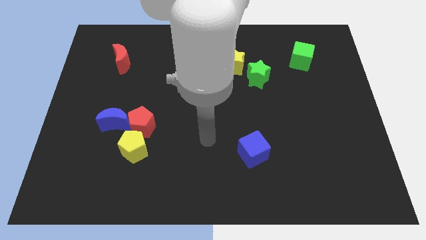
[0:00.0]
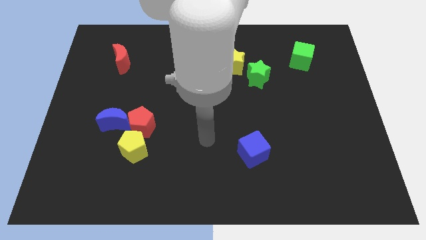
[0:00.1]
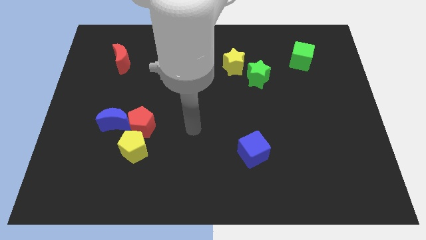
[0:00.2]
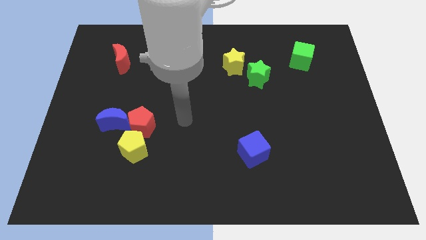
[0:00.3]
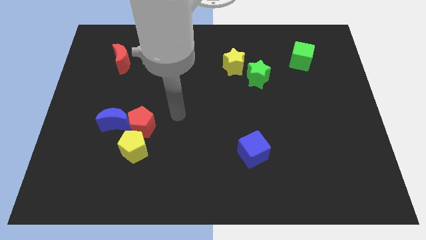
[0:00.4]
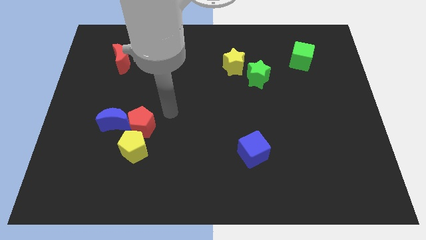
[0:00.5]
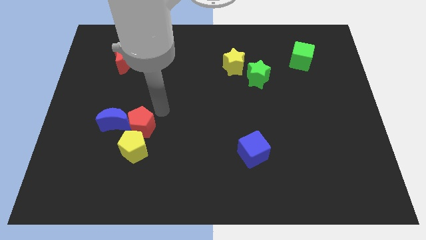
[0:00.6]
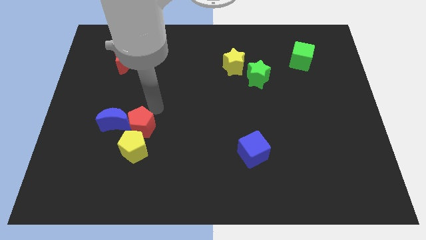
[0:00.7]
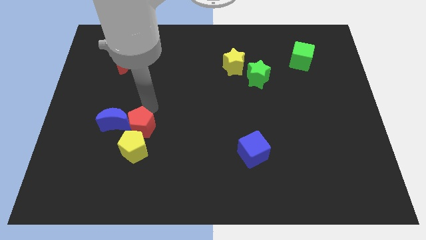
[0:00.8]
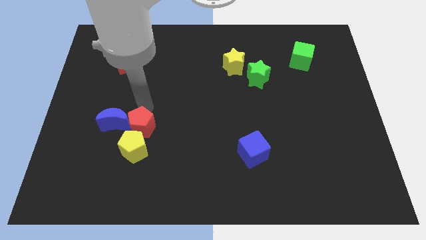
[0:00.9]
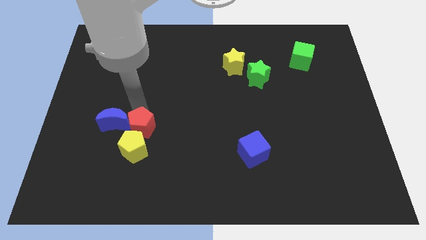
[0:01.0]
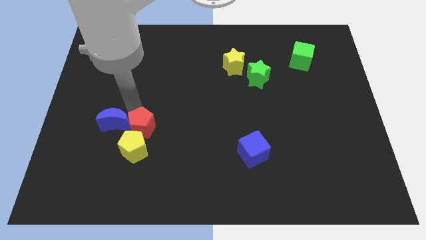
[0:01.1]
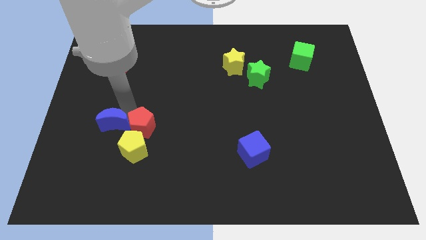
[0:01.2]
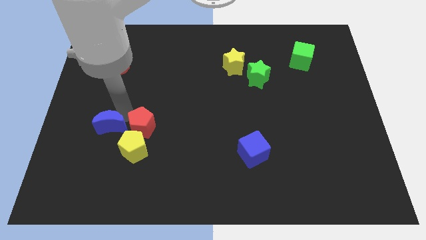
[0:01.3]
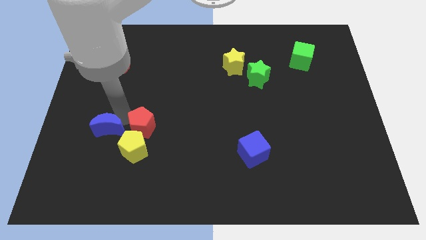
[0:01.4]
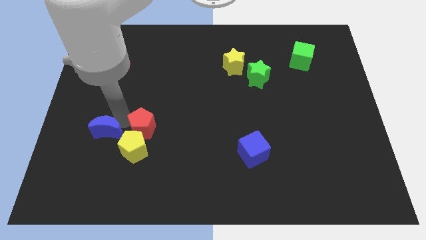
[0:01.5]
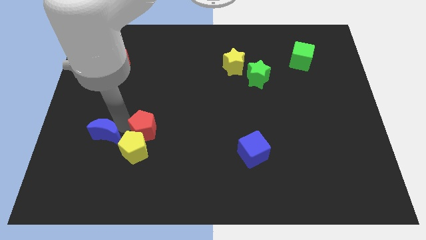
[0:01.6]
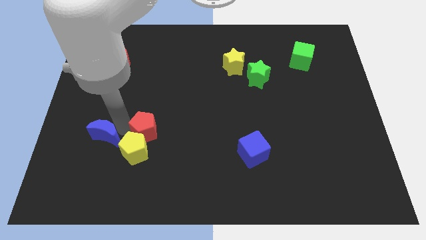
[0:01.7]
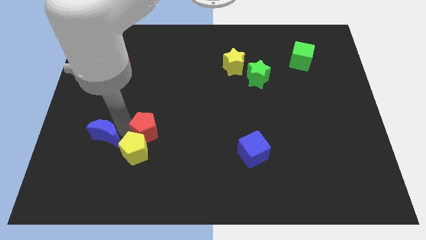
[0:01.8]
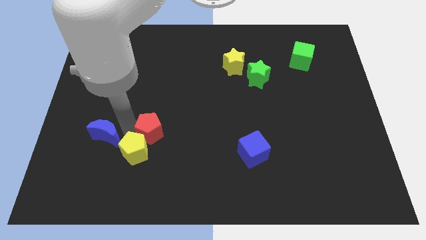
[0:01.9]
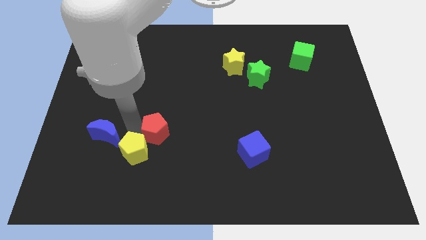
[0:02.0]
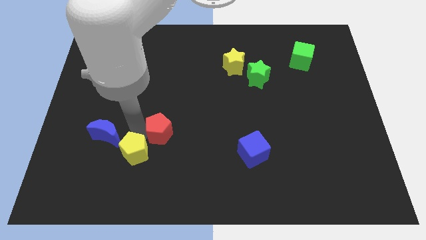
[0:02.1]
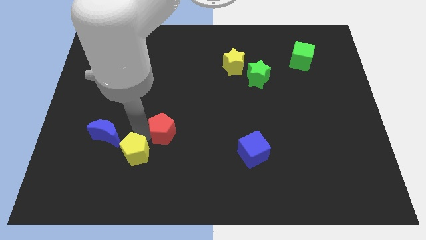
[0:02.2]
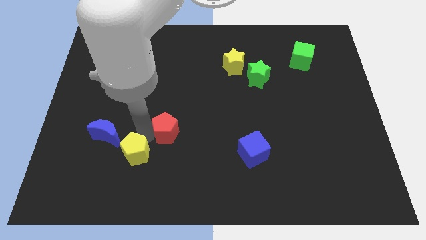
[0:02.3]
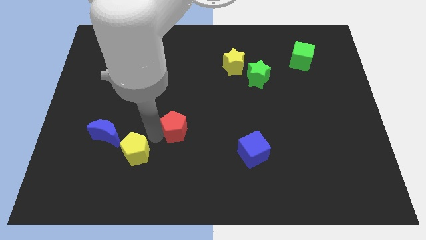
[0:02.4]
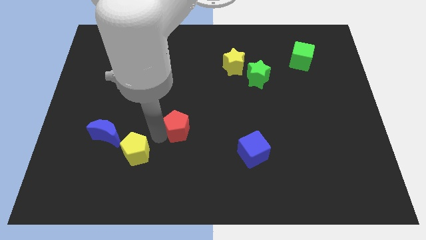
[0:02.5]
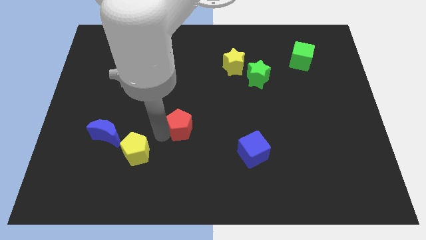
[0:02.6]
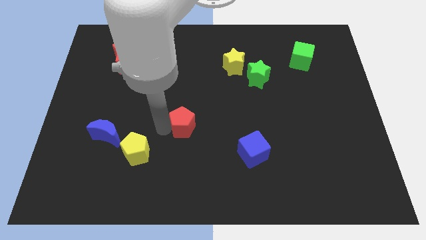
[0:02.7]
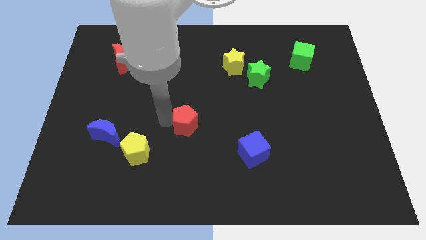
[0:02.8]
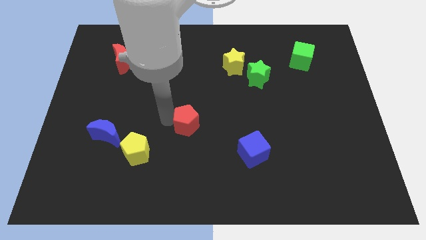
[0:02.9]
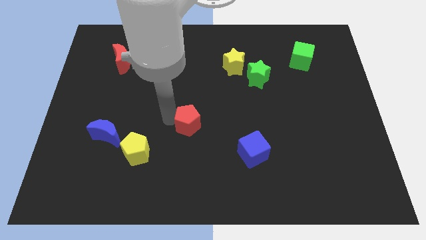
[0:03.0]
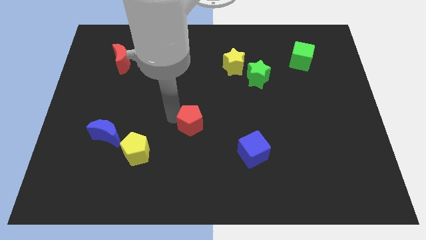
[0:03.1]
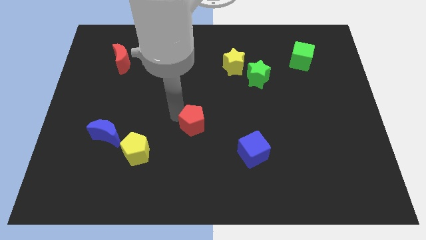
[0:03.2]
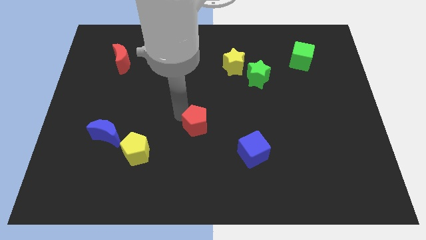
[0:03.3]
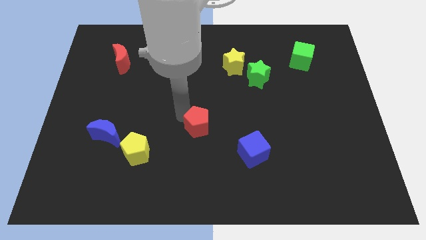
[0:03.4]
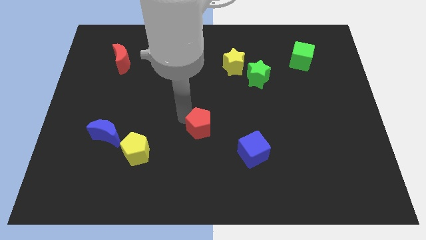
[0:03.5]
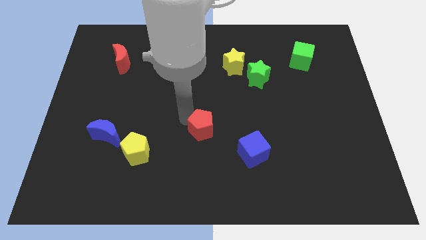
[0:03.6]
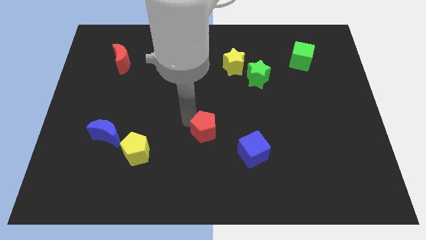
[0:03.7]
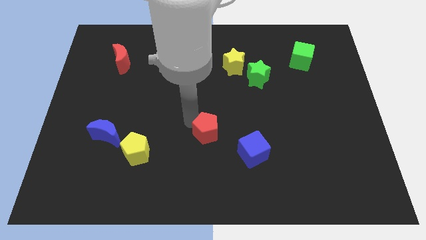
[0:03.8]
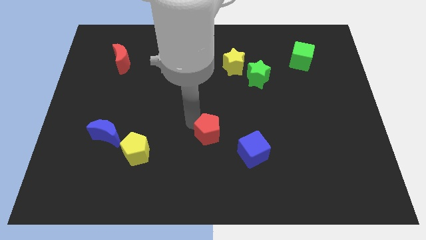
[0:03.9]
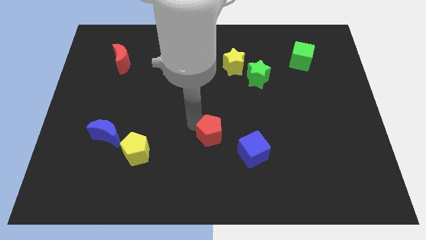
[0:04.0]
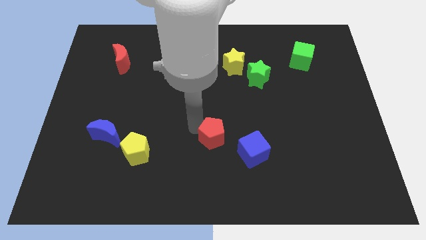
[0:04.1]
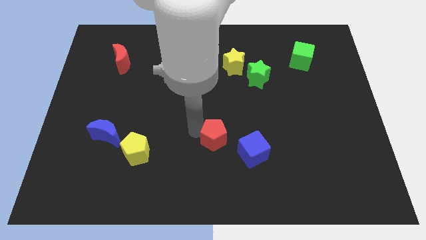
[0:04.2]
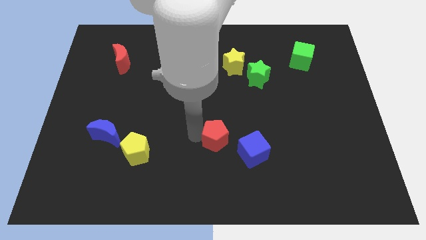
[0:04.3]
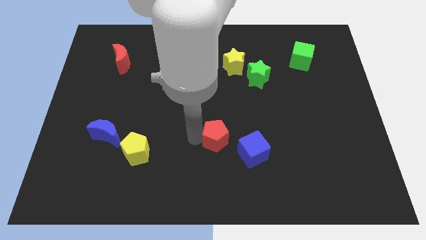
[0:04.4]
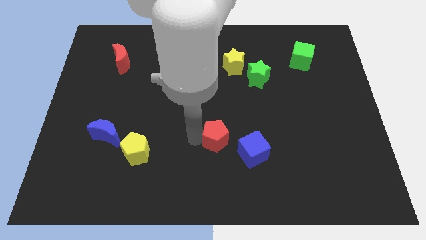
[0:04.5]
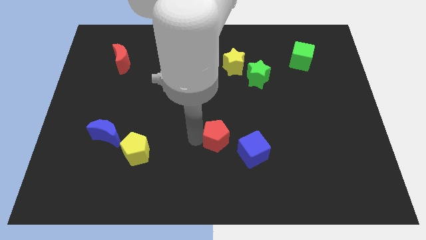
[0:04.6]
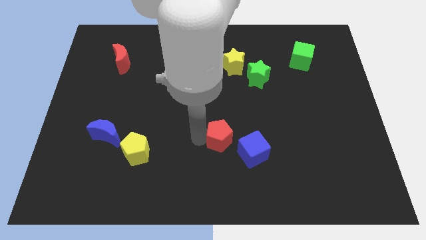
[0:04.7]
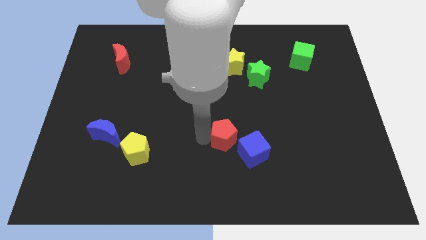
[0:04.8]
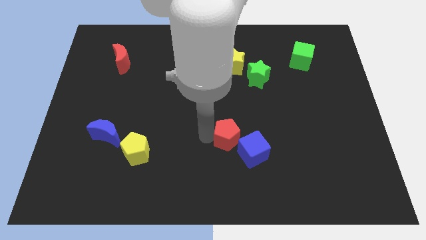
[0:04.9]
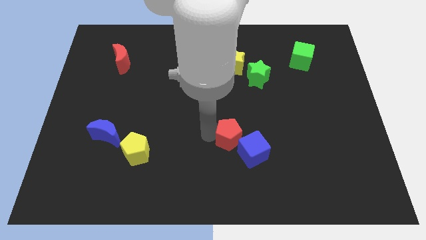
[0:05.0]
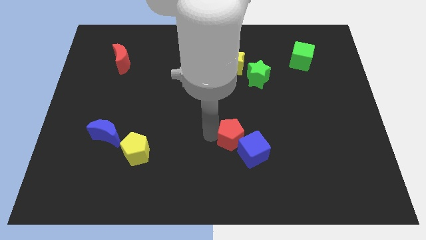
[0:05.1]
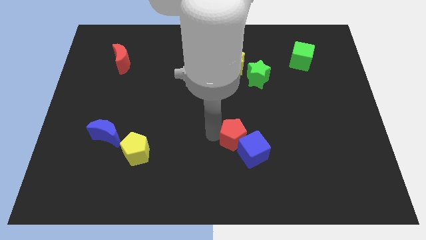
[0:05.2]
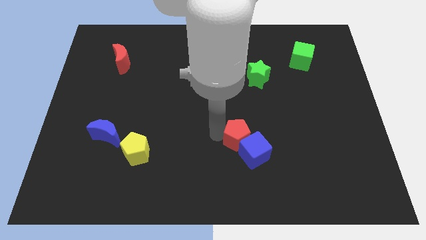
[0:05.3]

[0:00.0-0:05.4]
put the red pentagon close to the blue cube

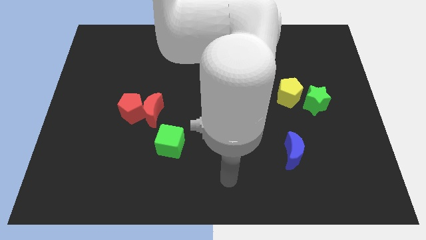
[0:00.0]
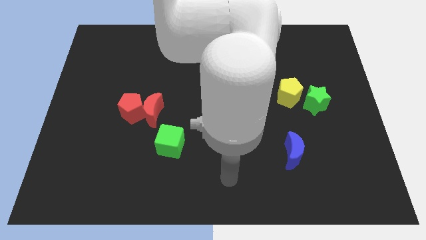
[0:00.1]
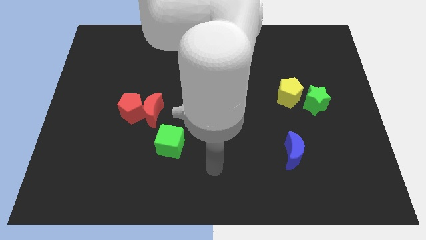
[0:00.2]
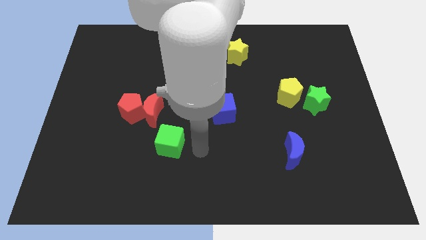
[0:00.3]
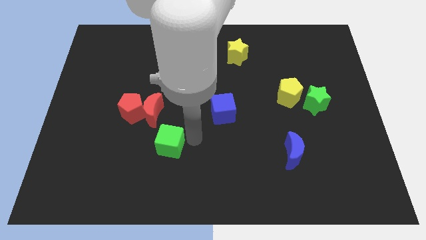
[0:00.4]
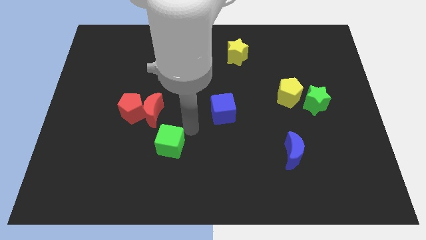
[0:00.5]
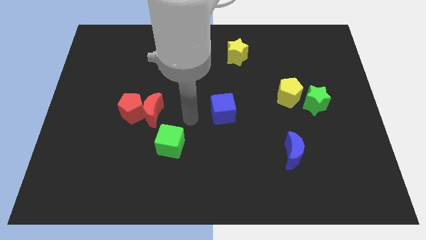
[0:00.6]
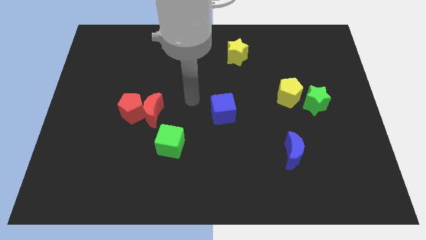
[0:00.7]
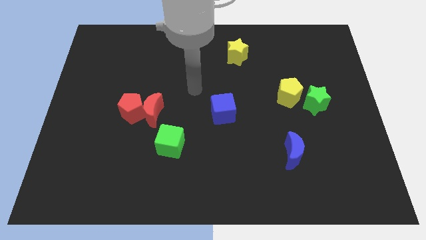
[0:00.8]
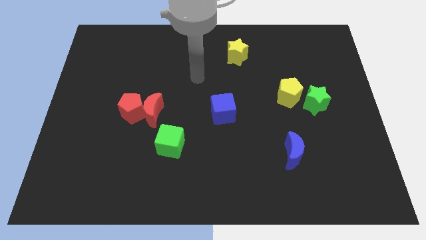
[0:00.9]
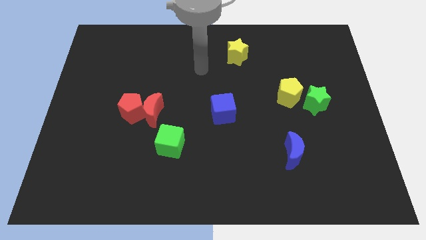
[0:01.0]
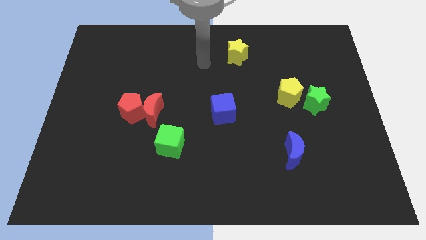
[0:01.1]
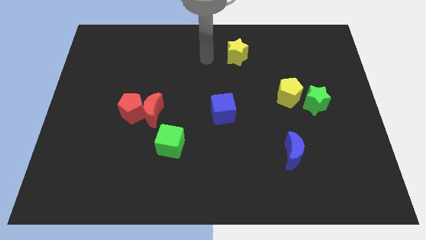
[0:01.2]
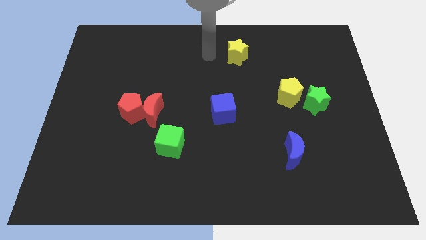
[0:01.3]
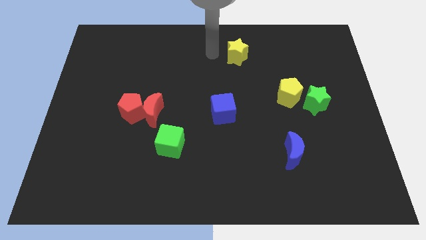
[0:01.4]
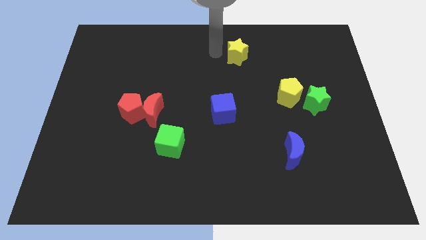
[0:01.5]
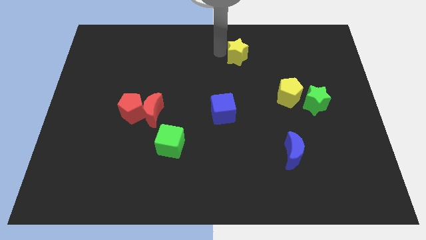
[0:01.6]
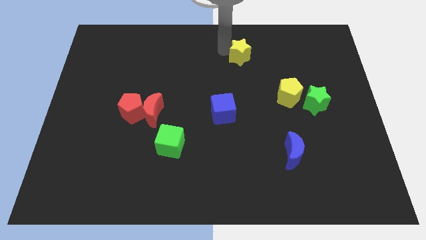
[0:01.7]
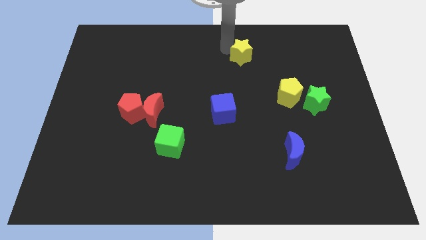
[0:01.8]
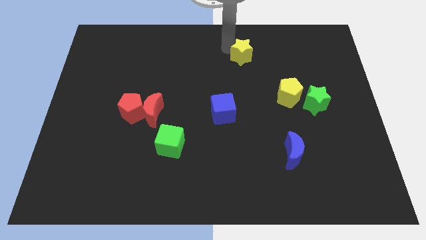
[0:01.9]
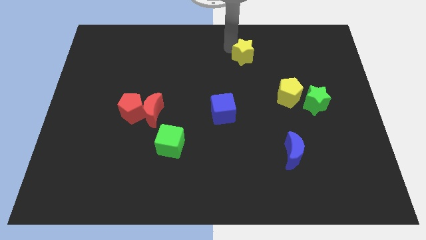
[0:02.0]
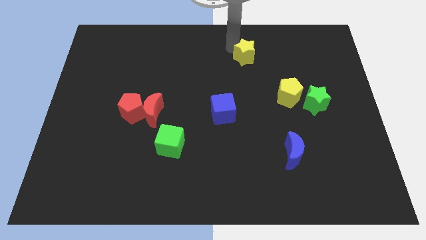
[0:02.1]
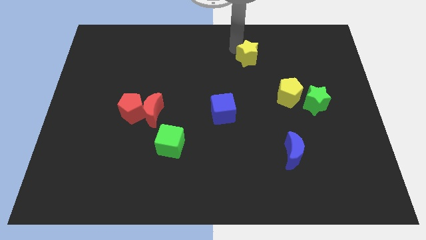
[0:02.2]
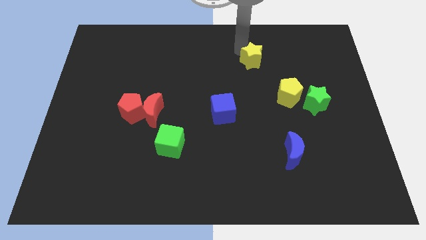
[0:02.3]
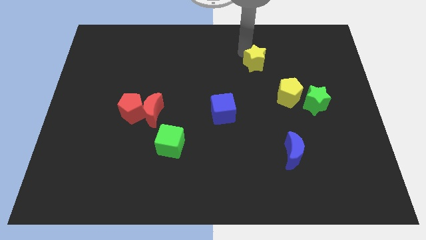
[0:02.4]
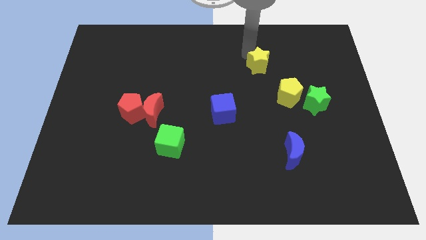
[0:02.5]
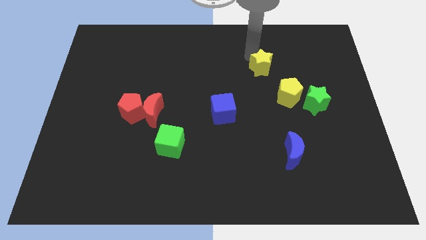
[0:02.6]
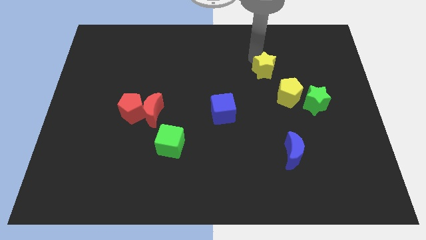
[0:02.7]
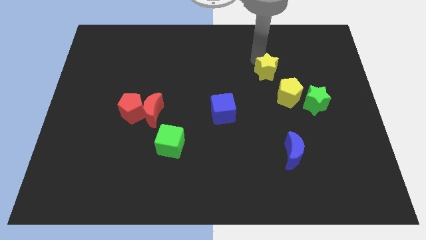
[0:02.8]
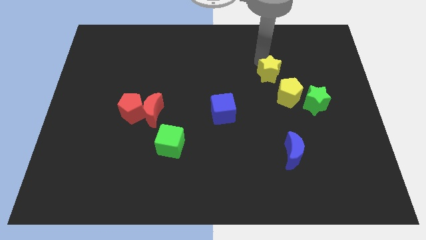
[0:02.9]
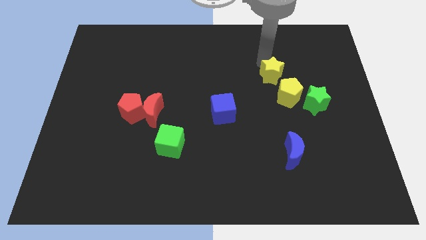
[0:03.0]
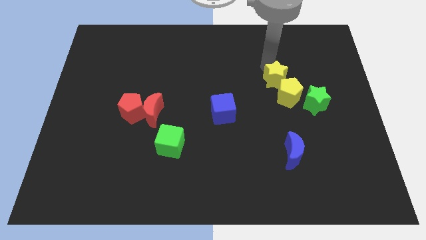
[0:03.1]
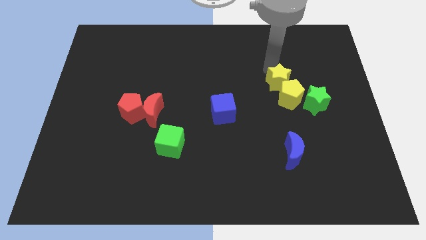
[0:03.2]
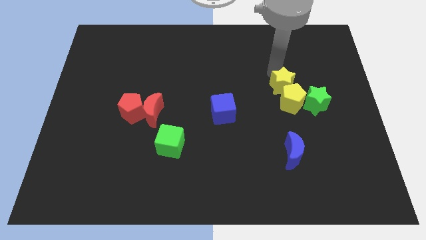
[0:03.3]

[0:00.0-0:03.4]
put the yellow star next to the yellow pentagon
